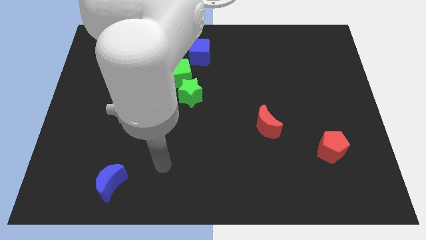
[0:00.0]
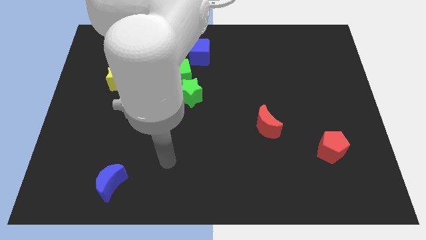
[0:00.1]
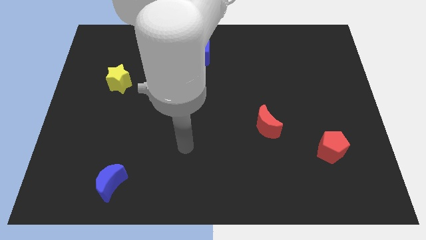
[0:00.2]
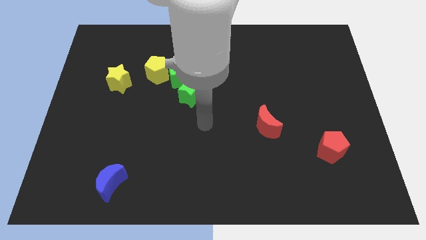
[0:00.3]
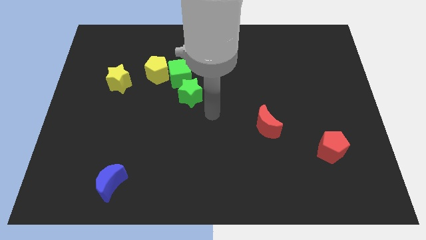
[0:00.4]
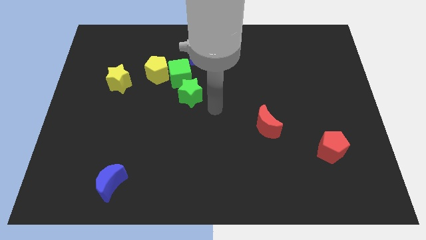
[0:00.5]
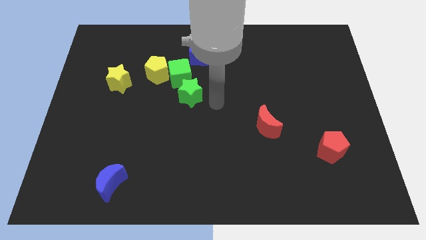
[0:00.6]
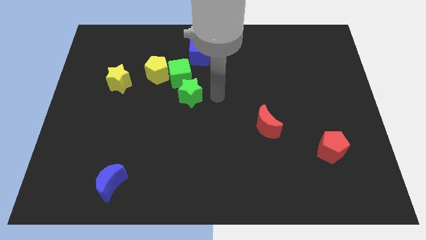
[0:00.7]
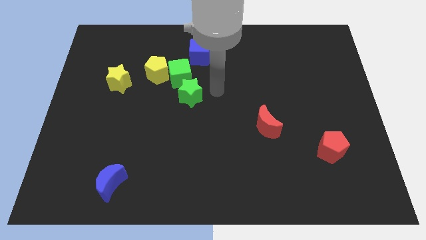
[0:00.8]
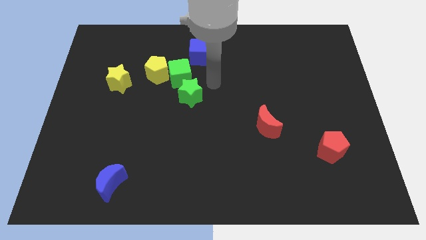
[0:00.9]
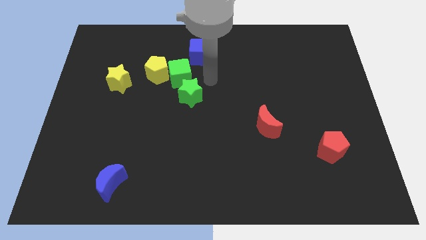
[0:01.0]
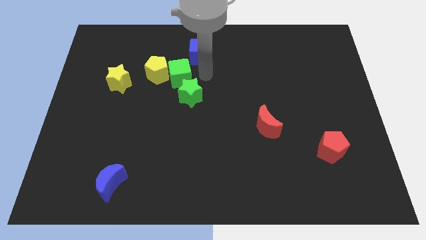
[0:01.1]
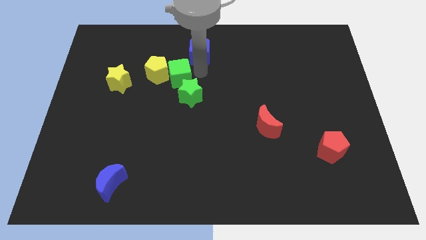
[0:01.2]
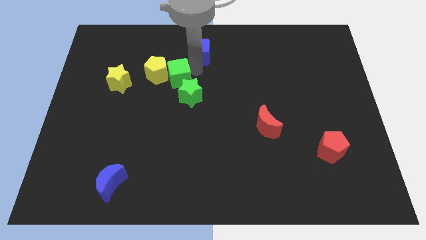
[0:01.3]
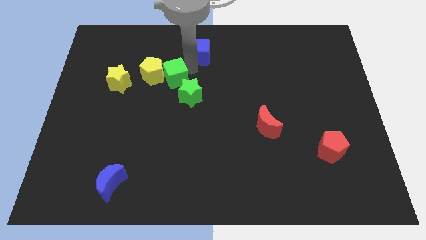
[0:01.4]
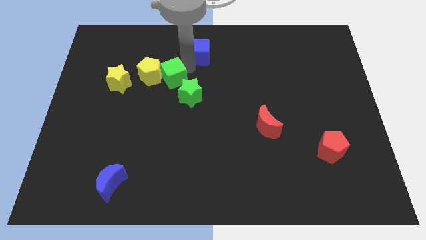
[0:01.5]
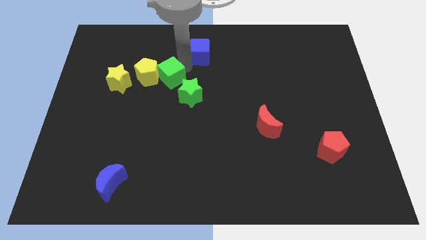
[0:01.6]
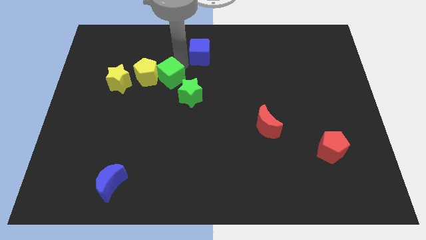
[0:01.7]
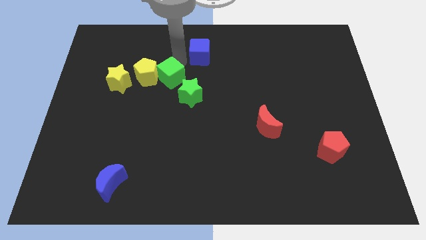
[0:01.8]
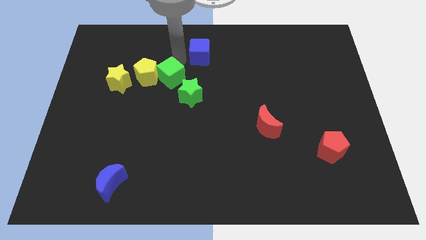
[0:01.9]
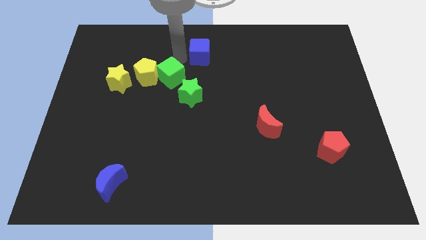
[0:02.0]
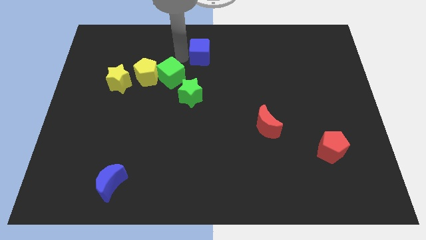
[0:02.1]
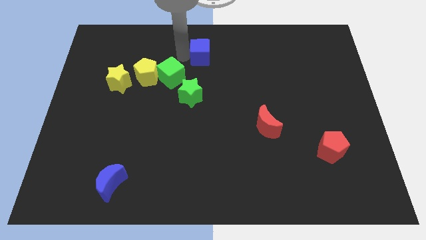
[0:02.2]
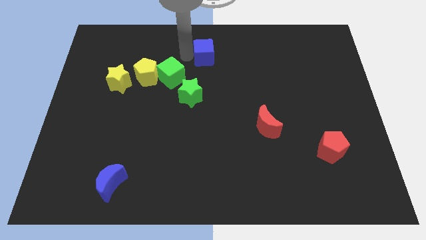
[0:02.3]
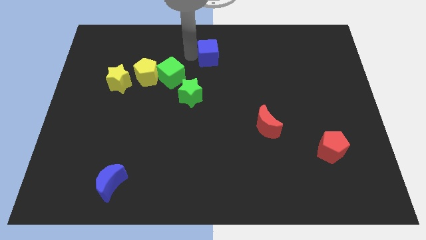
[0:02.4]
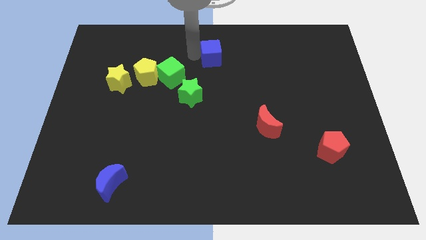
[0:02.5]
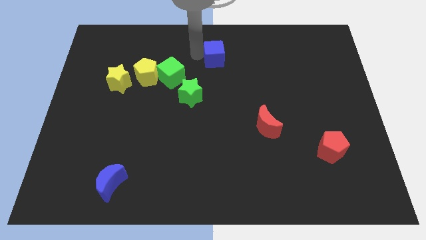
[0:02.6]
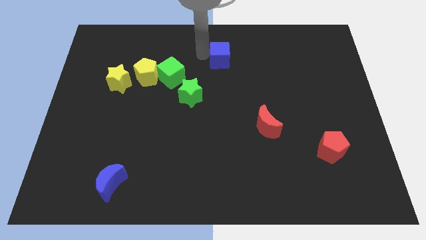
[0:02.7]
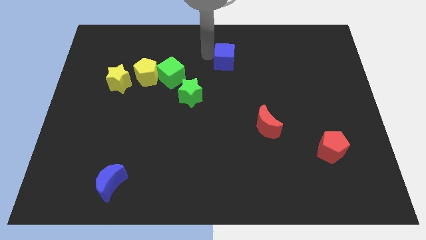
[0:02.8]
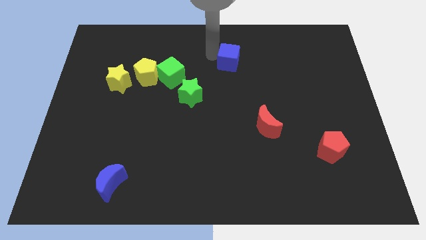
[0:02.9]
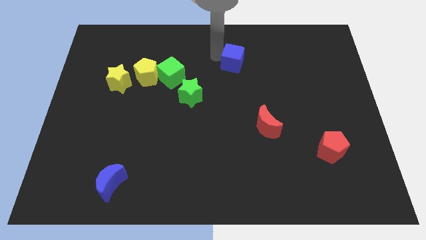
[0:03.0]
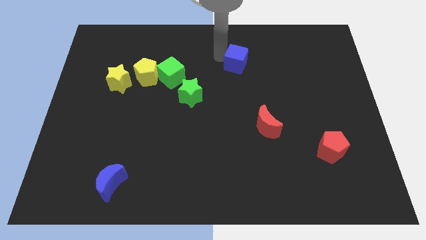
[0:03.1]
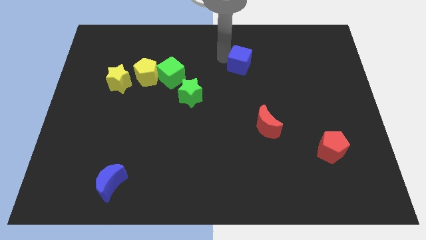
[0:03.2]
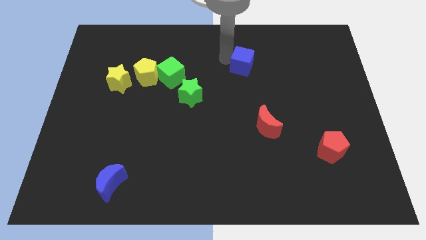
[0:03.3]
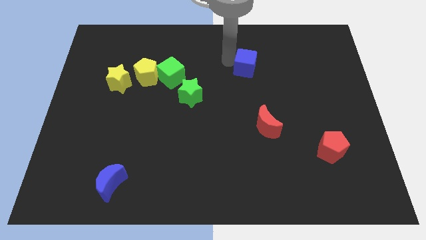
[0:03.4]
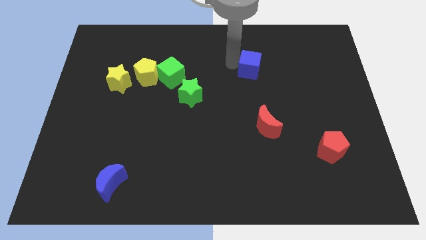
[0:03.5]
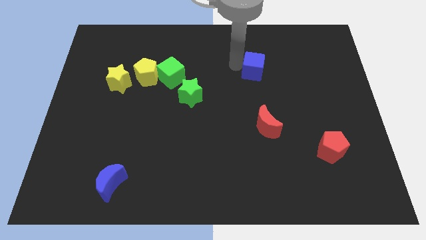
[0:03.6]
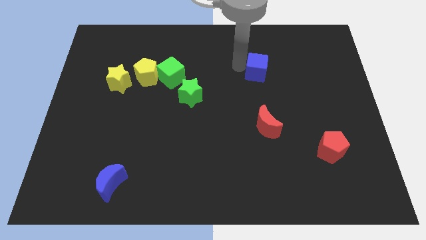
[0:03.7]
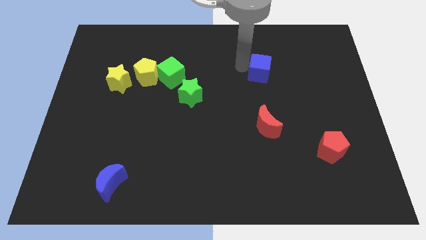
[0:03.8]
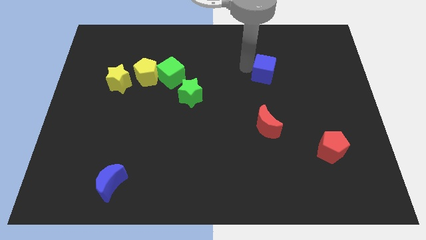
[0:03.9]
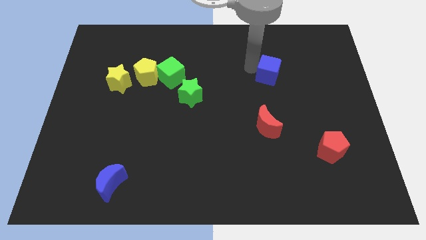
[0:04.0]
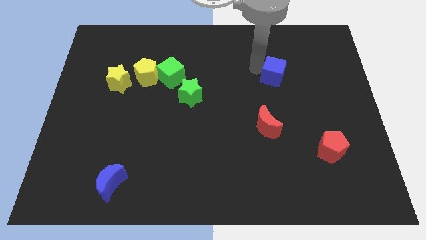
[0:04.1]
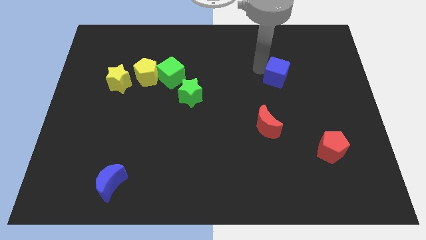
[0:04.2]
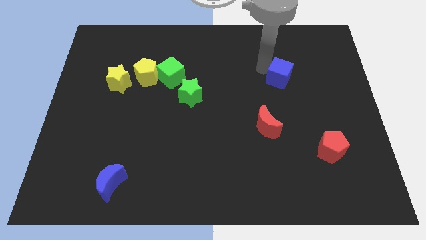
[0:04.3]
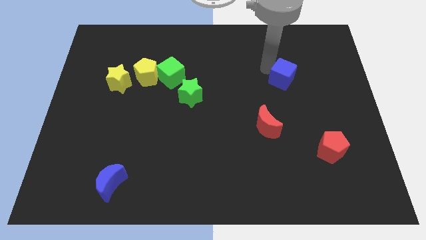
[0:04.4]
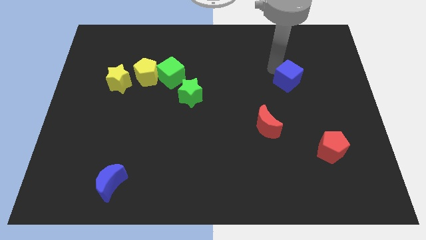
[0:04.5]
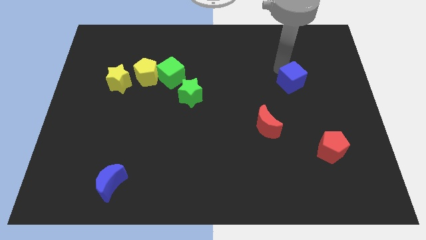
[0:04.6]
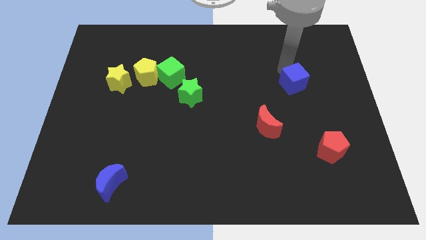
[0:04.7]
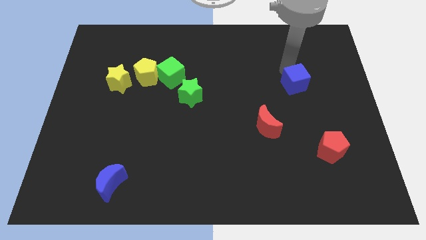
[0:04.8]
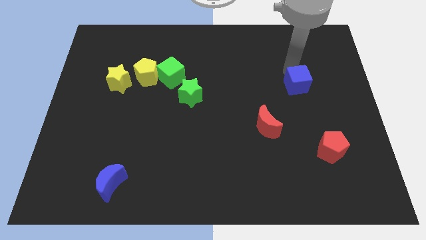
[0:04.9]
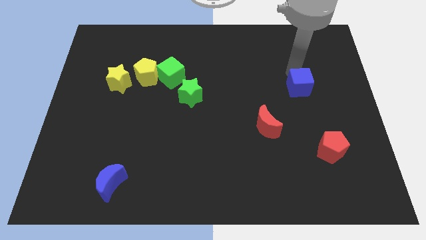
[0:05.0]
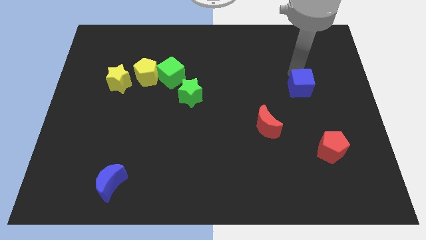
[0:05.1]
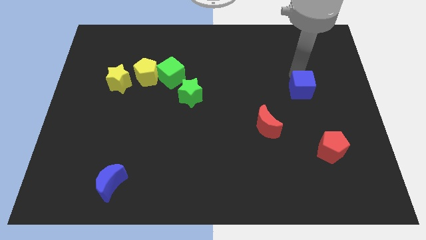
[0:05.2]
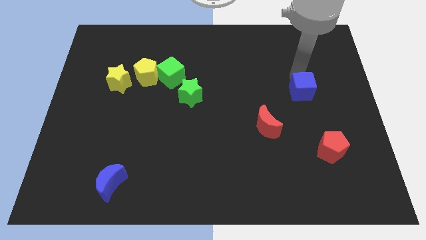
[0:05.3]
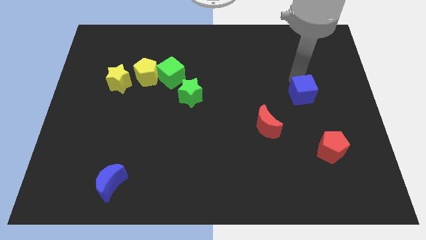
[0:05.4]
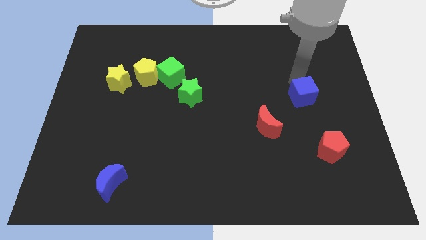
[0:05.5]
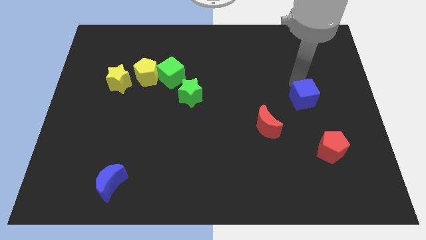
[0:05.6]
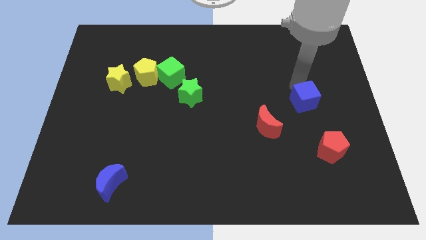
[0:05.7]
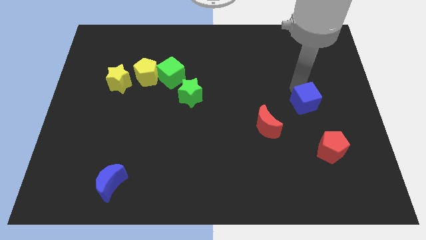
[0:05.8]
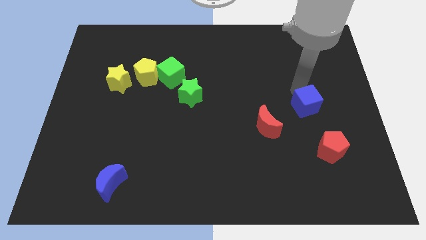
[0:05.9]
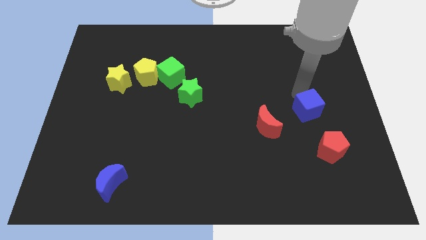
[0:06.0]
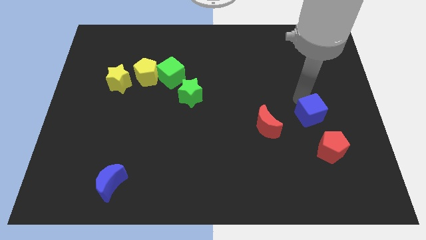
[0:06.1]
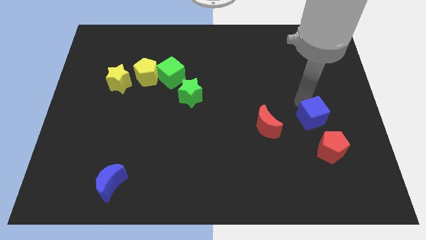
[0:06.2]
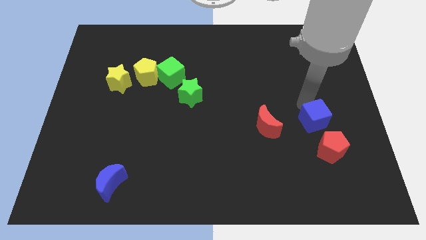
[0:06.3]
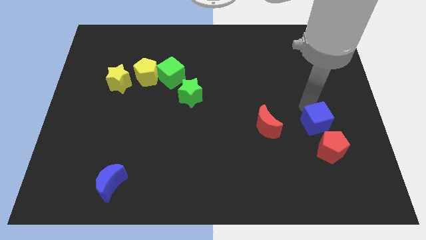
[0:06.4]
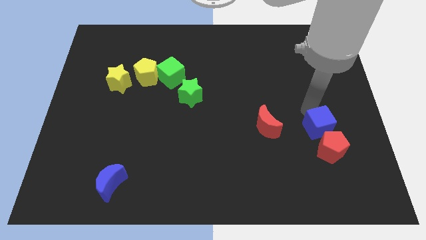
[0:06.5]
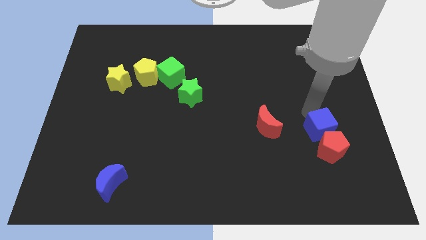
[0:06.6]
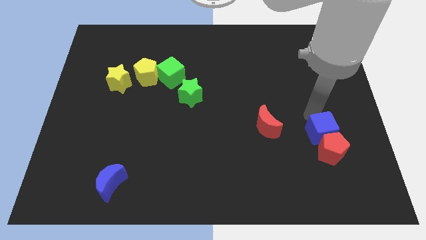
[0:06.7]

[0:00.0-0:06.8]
put the blue cube next to the red pentagon

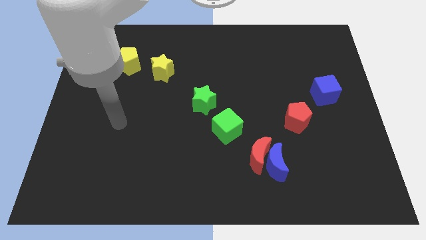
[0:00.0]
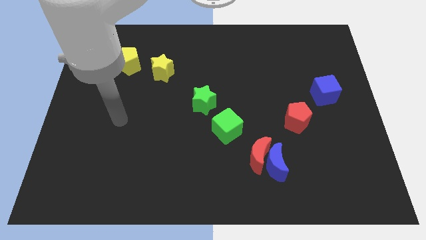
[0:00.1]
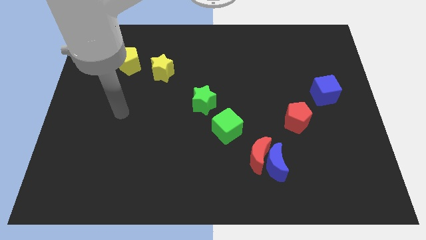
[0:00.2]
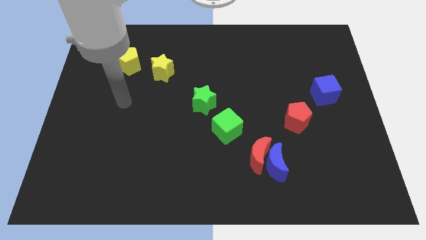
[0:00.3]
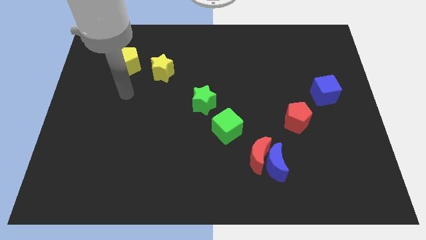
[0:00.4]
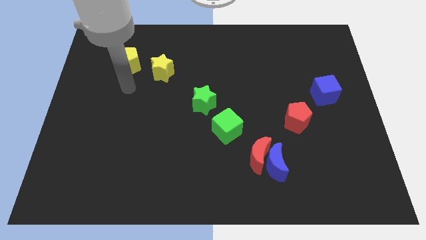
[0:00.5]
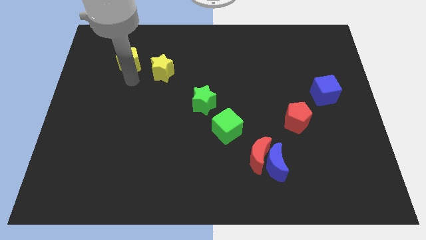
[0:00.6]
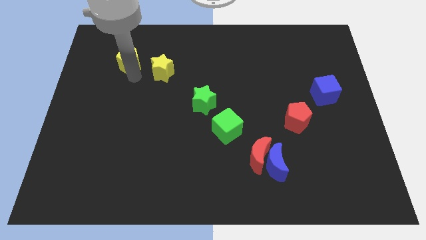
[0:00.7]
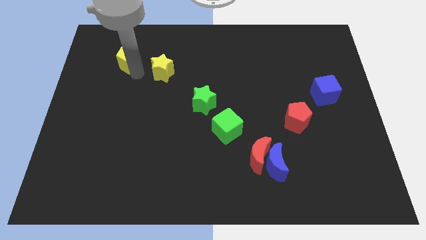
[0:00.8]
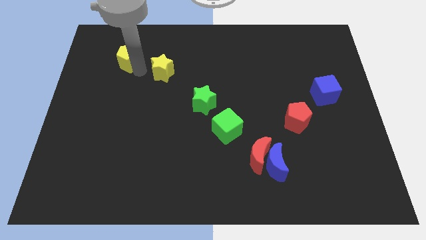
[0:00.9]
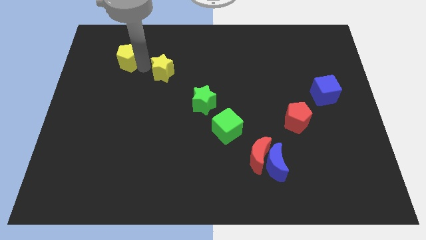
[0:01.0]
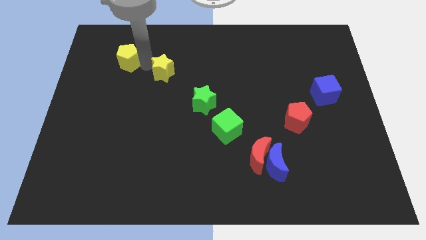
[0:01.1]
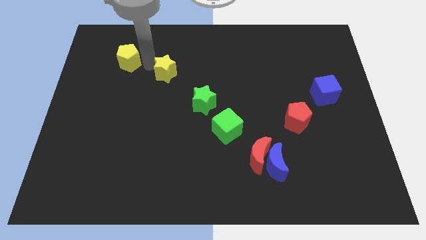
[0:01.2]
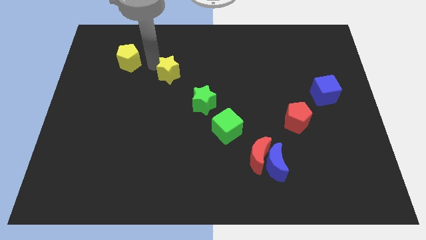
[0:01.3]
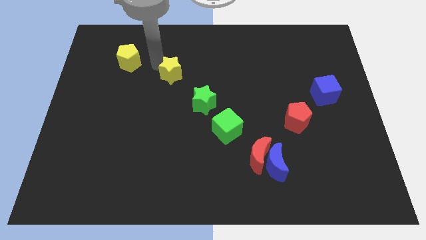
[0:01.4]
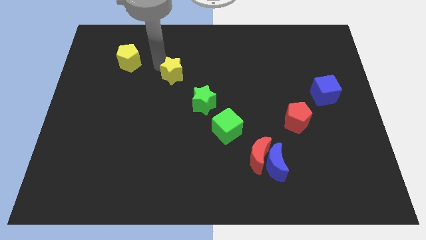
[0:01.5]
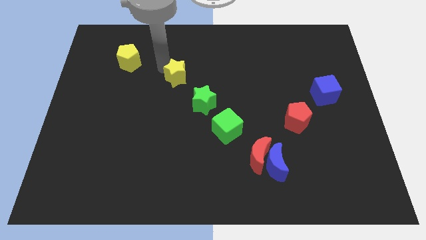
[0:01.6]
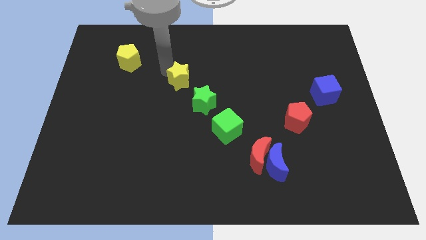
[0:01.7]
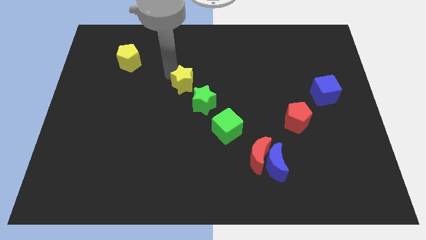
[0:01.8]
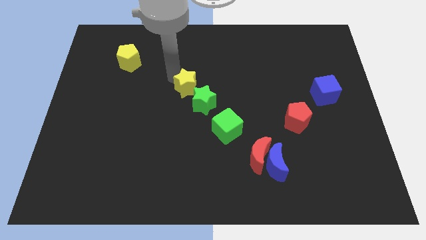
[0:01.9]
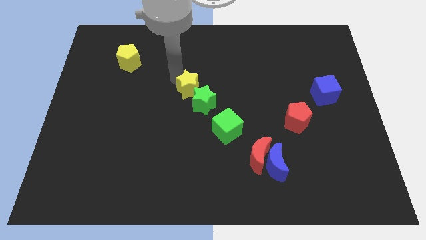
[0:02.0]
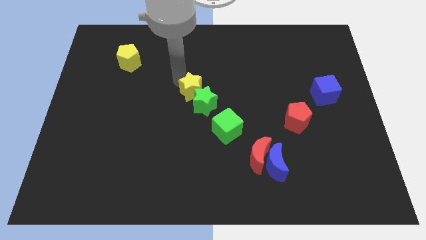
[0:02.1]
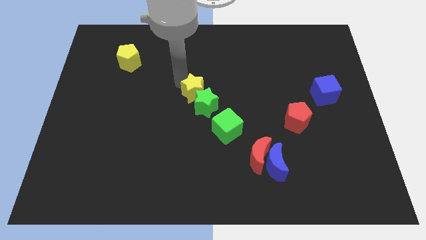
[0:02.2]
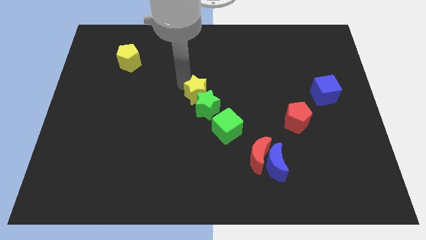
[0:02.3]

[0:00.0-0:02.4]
push the yellow star next to the green star
